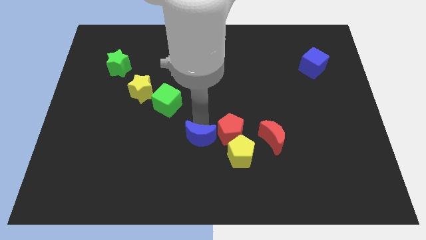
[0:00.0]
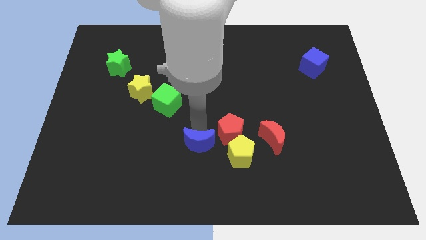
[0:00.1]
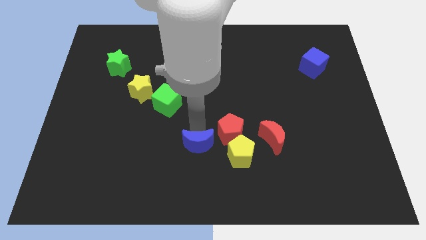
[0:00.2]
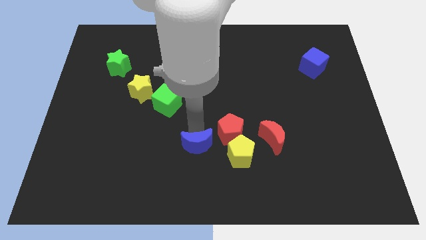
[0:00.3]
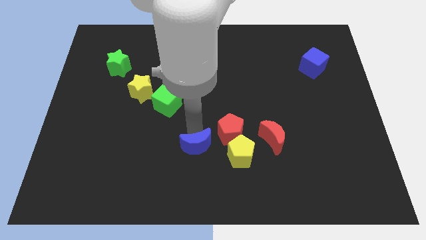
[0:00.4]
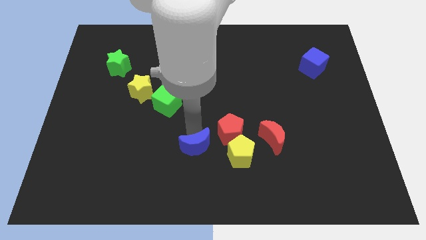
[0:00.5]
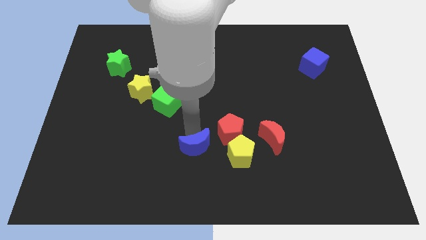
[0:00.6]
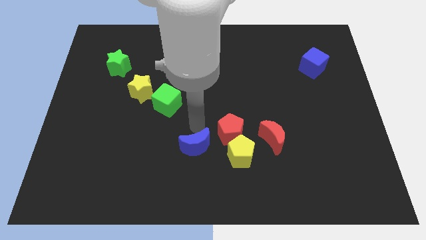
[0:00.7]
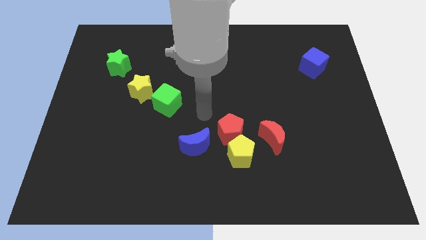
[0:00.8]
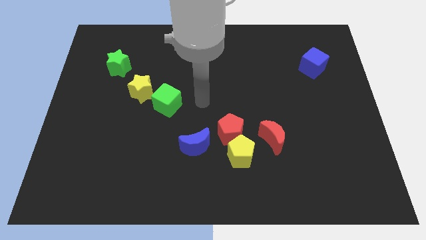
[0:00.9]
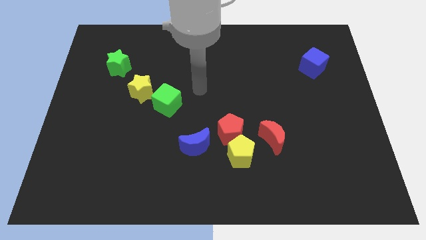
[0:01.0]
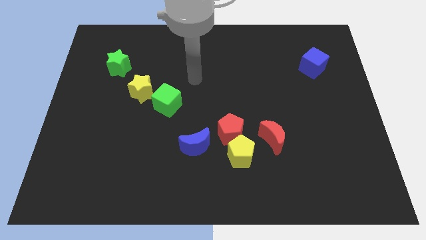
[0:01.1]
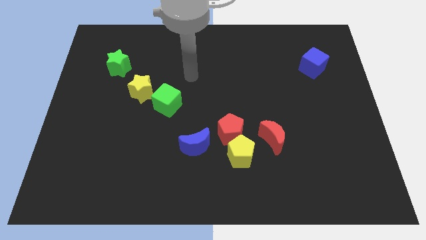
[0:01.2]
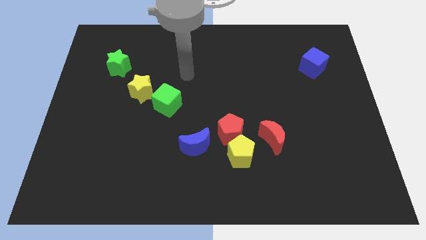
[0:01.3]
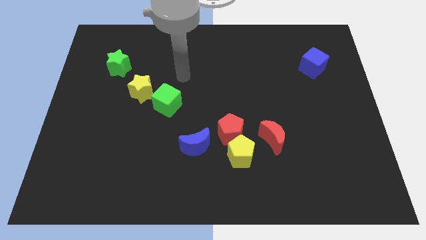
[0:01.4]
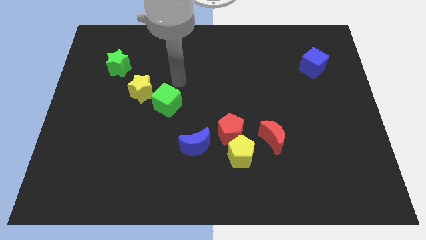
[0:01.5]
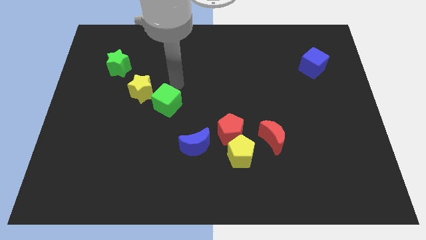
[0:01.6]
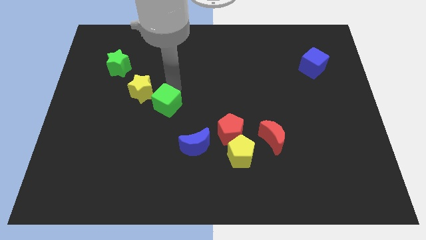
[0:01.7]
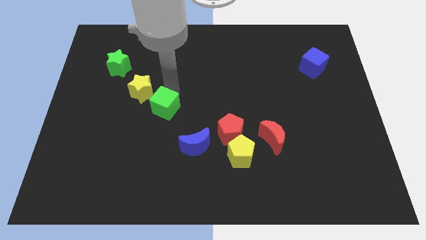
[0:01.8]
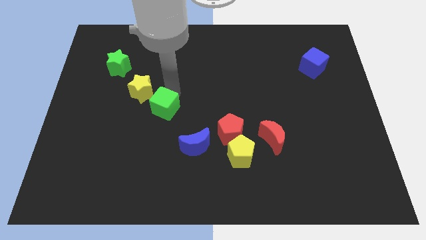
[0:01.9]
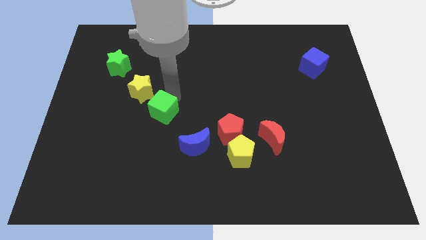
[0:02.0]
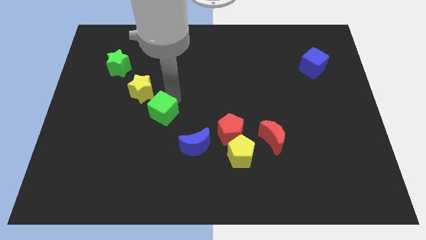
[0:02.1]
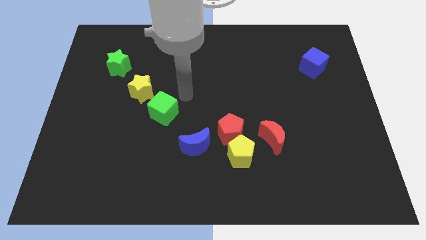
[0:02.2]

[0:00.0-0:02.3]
slightly push down the blue moon

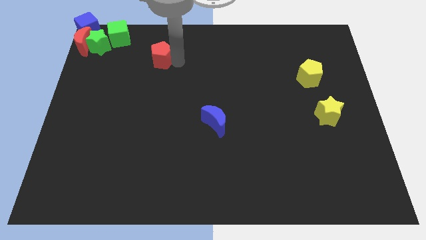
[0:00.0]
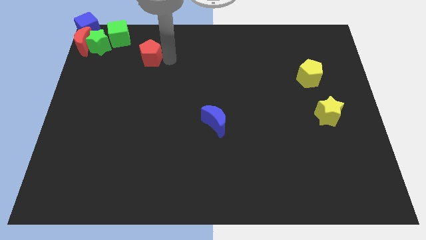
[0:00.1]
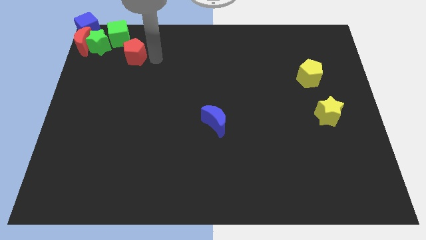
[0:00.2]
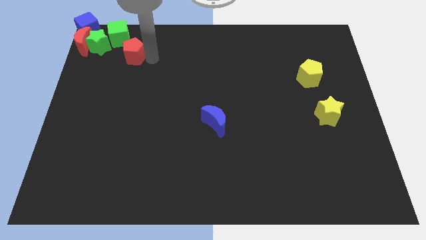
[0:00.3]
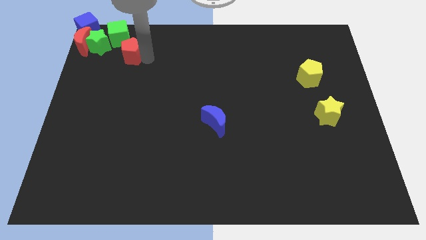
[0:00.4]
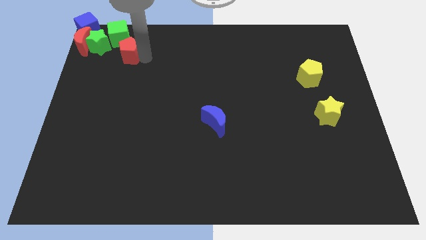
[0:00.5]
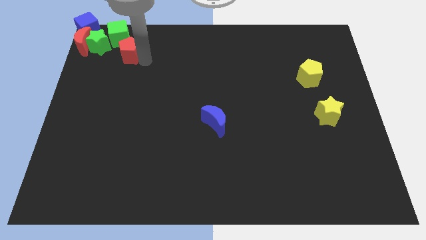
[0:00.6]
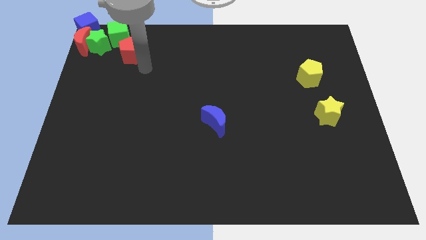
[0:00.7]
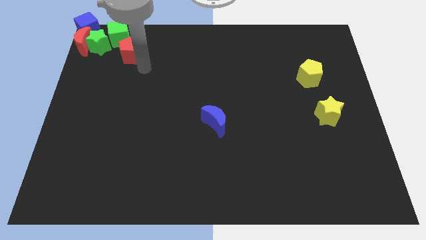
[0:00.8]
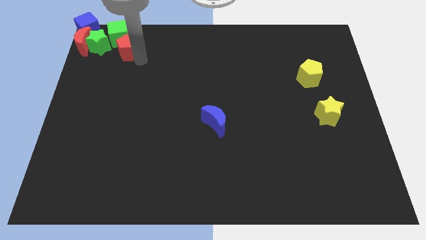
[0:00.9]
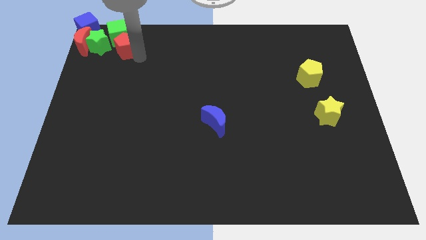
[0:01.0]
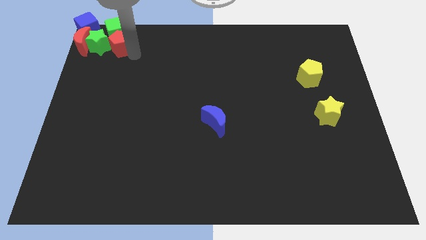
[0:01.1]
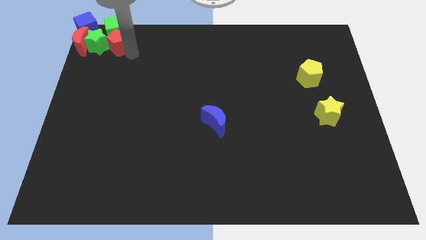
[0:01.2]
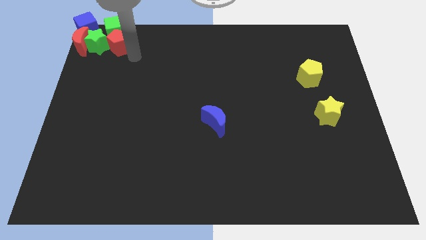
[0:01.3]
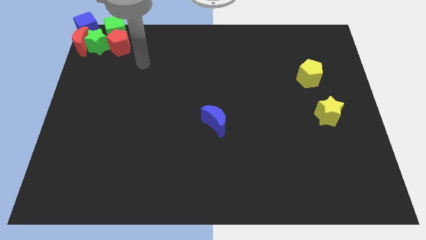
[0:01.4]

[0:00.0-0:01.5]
push the red pentagon into the green cube

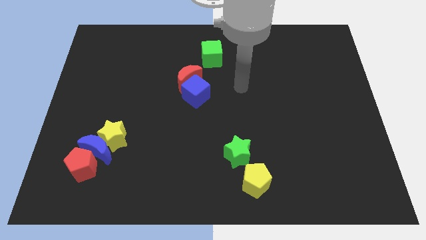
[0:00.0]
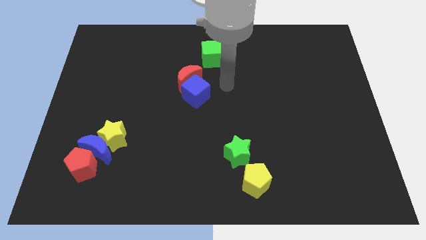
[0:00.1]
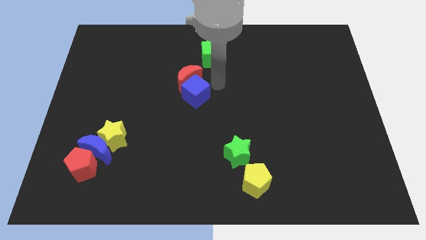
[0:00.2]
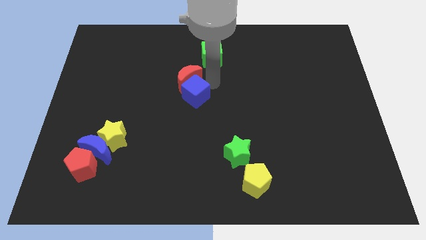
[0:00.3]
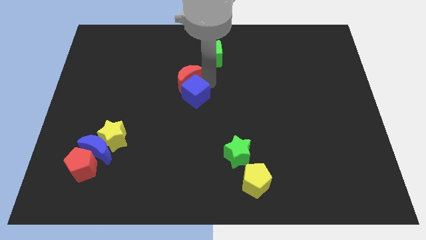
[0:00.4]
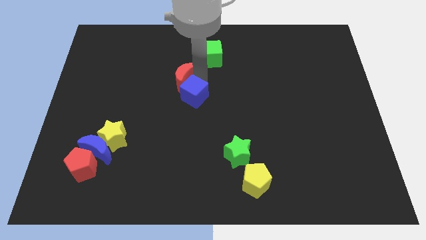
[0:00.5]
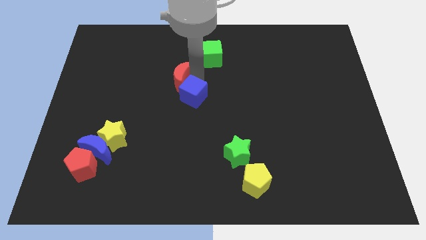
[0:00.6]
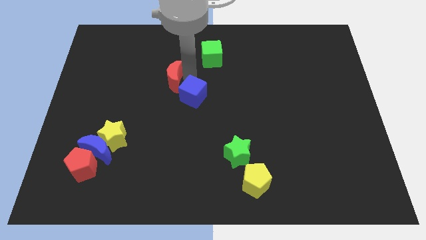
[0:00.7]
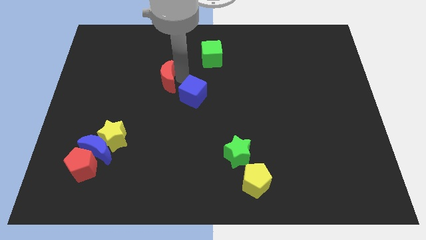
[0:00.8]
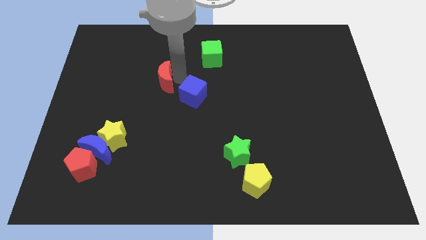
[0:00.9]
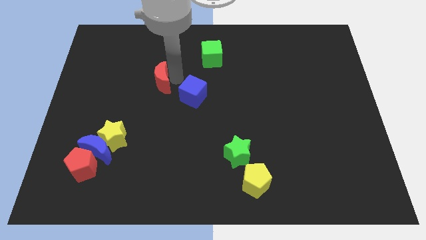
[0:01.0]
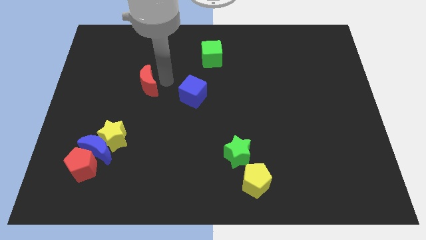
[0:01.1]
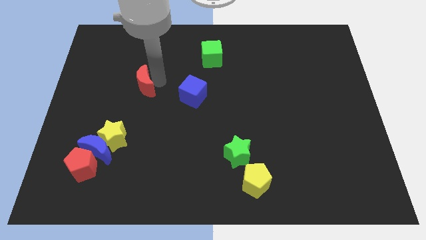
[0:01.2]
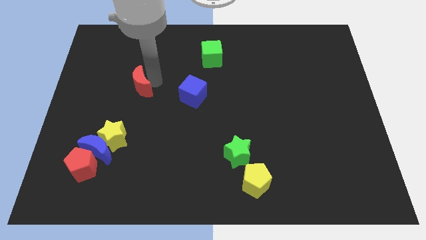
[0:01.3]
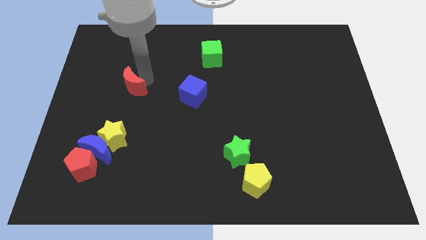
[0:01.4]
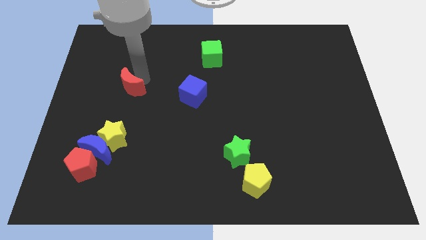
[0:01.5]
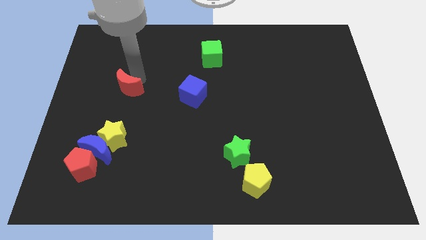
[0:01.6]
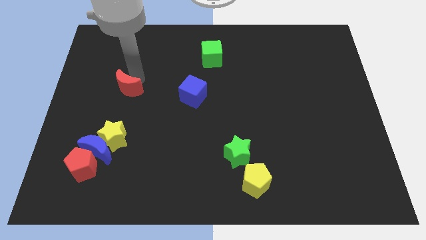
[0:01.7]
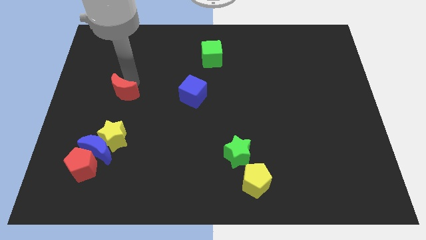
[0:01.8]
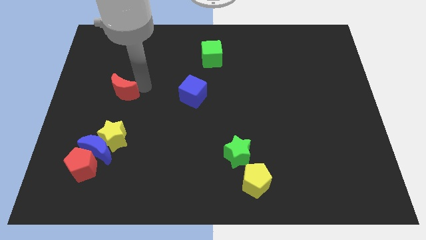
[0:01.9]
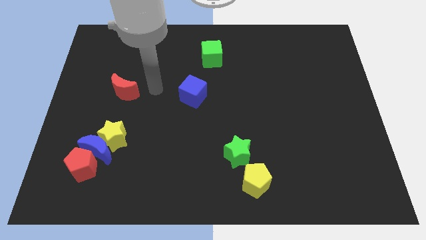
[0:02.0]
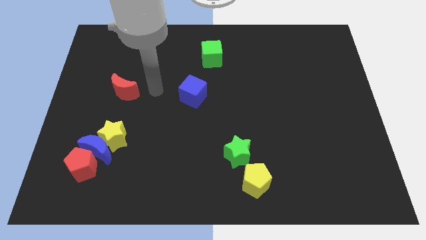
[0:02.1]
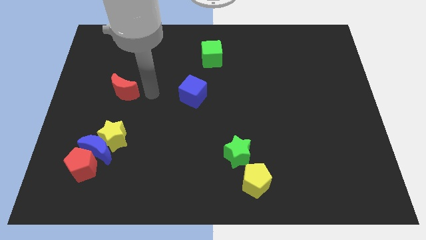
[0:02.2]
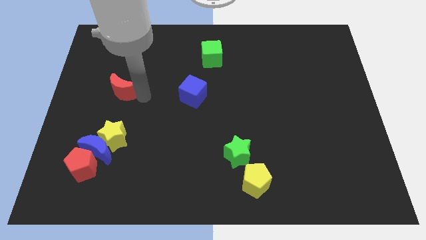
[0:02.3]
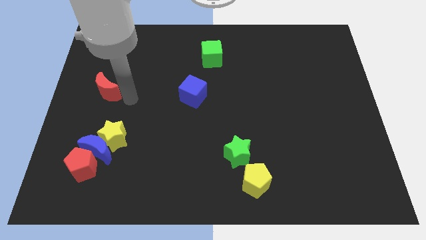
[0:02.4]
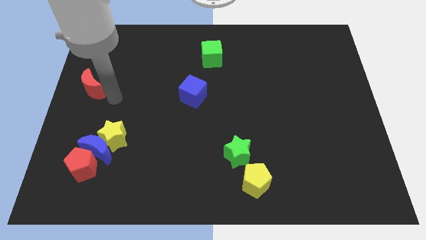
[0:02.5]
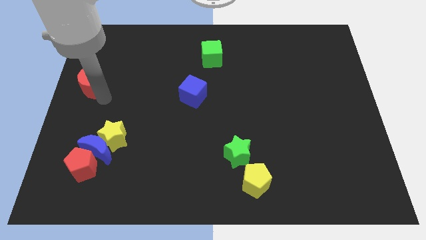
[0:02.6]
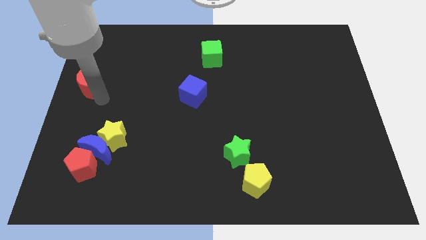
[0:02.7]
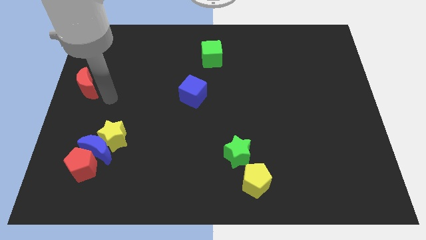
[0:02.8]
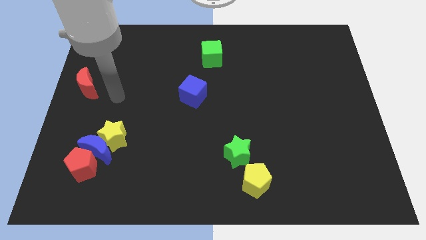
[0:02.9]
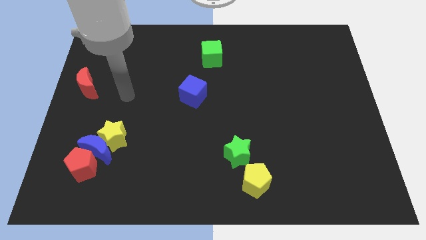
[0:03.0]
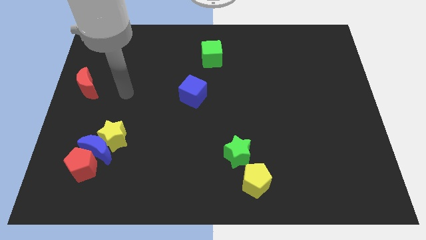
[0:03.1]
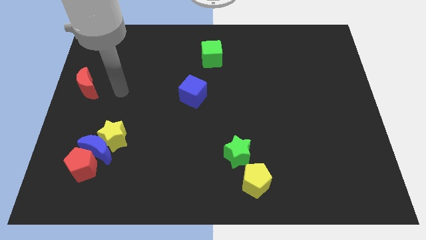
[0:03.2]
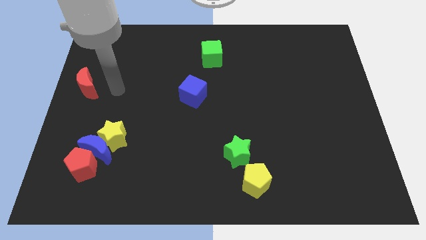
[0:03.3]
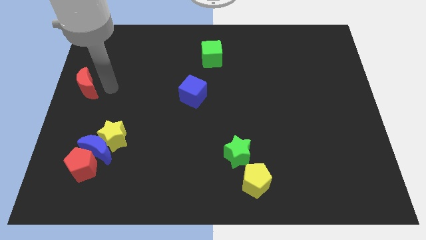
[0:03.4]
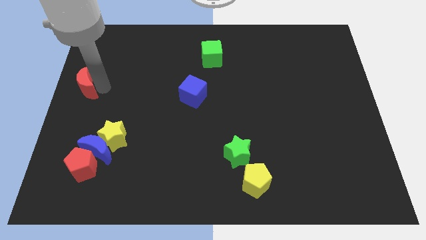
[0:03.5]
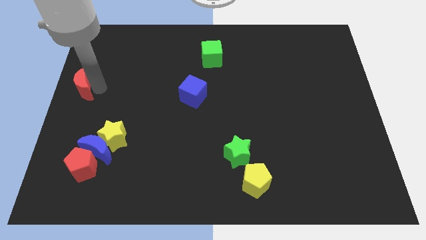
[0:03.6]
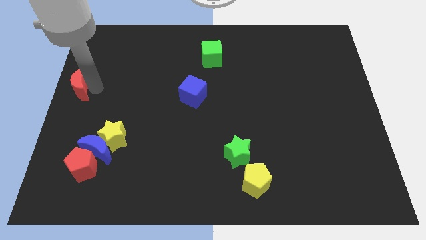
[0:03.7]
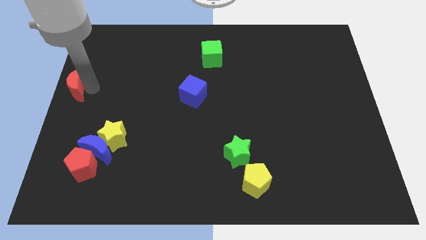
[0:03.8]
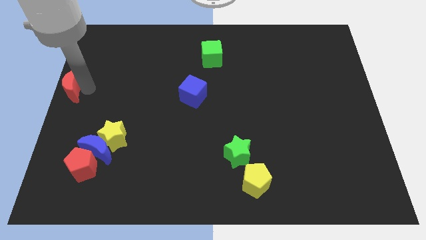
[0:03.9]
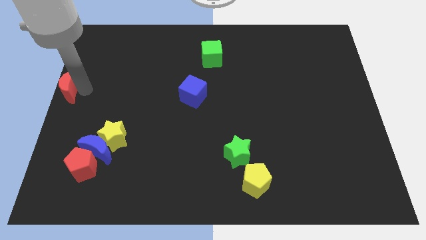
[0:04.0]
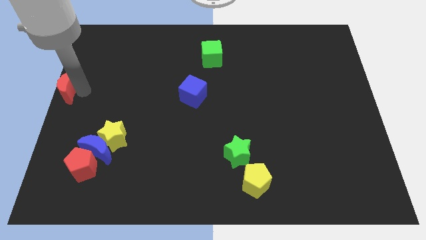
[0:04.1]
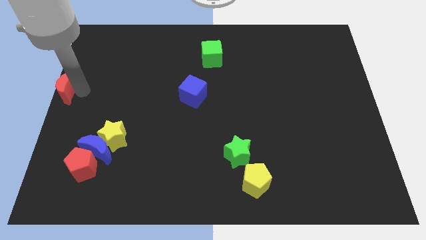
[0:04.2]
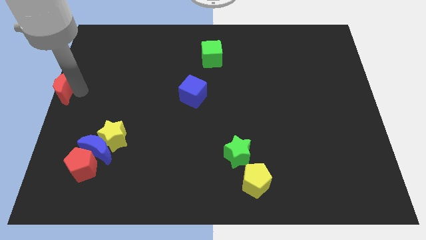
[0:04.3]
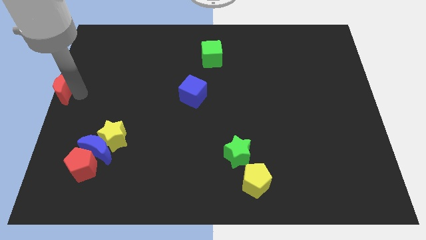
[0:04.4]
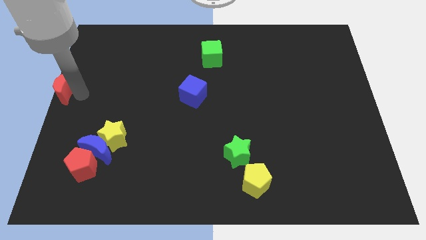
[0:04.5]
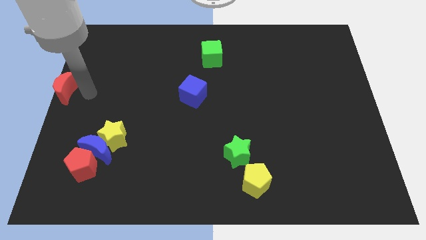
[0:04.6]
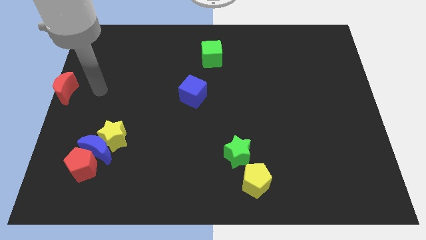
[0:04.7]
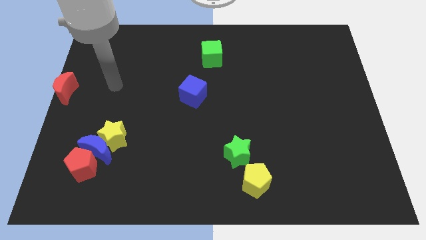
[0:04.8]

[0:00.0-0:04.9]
move the red moon to the center left

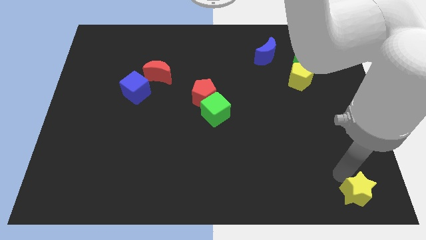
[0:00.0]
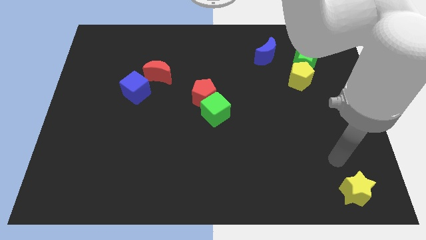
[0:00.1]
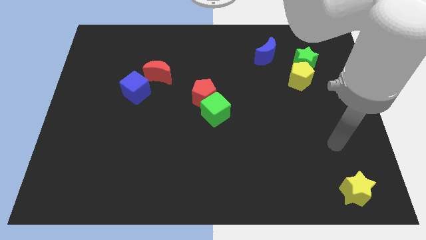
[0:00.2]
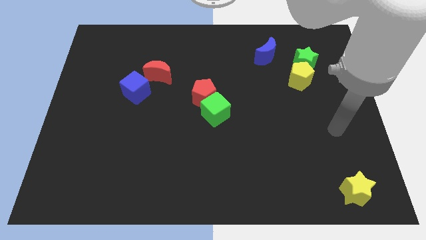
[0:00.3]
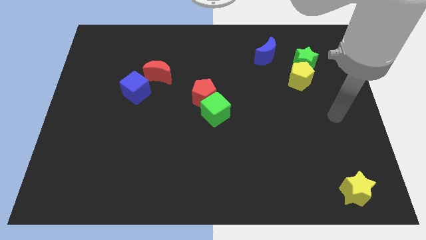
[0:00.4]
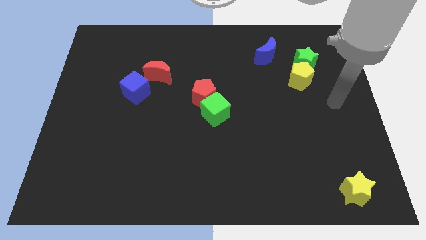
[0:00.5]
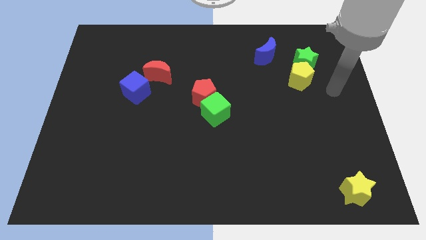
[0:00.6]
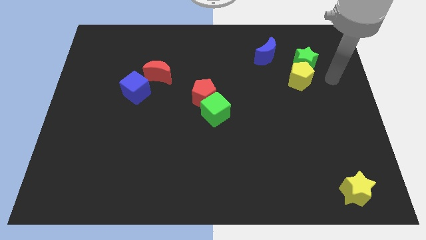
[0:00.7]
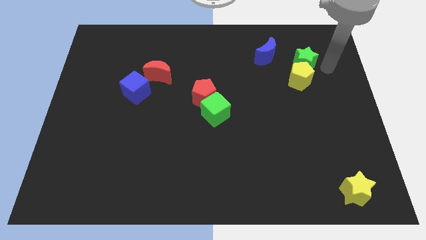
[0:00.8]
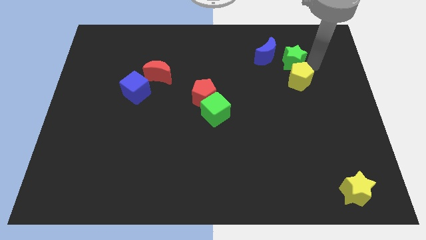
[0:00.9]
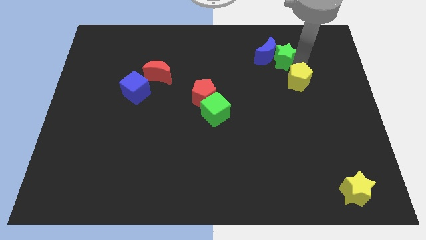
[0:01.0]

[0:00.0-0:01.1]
push the green star into blue crescent
